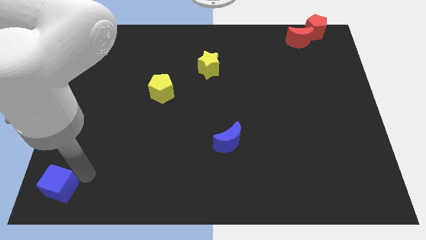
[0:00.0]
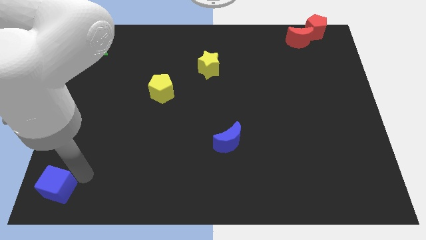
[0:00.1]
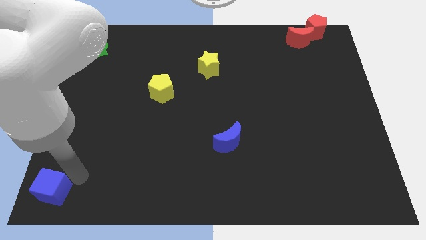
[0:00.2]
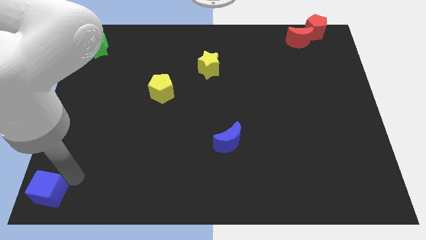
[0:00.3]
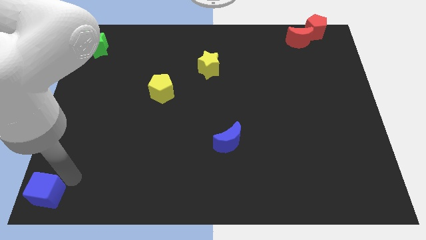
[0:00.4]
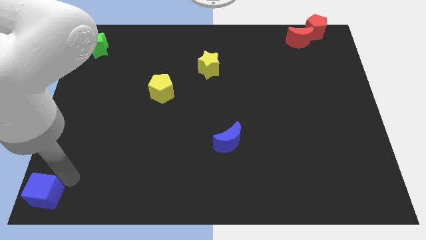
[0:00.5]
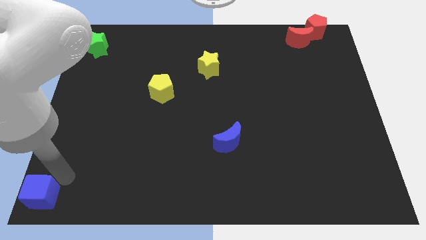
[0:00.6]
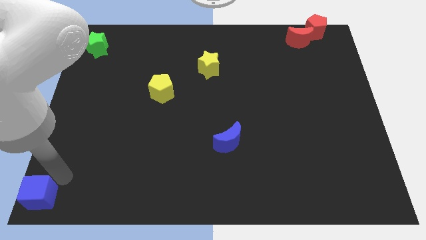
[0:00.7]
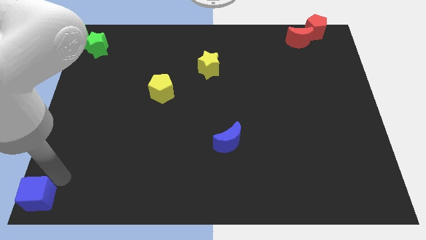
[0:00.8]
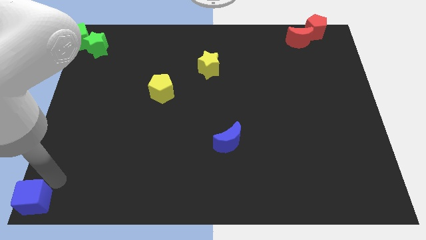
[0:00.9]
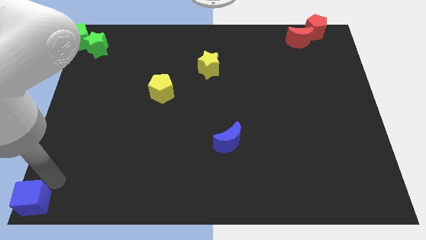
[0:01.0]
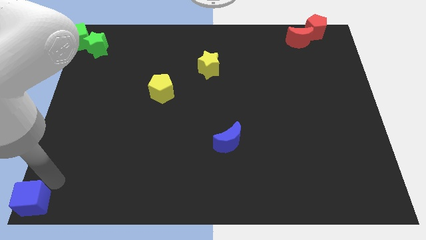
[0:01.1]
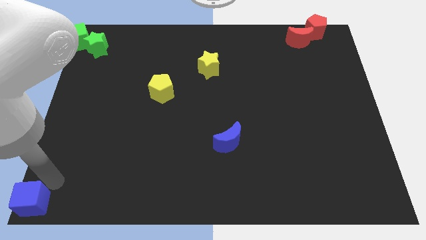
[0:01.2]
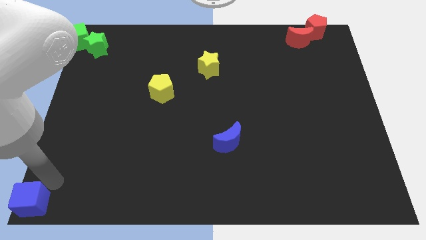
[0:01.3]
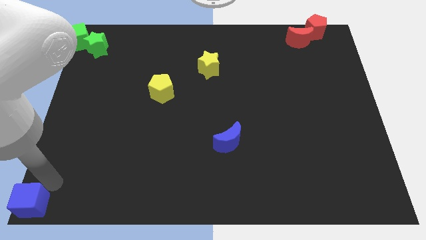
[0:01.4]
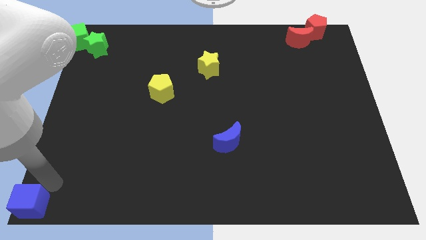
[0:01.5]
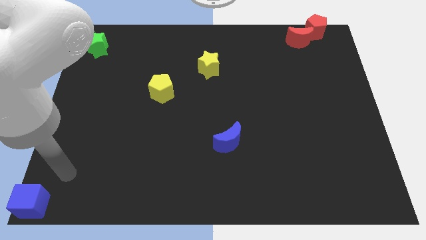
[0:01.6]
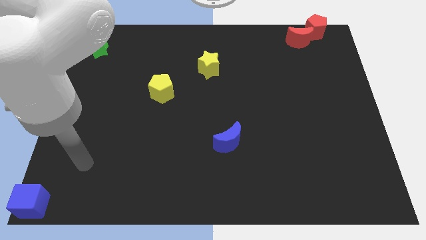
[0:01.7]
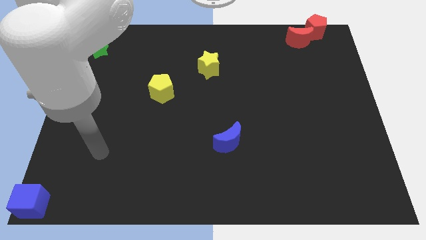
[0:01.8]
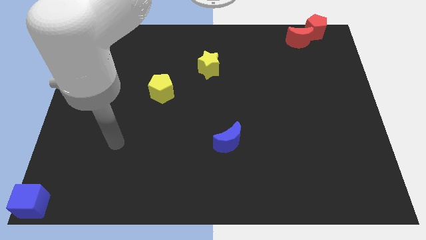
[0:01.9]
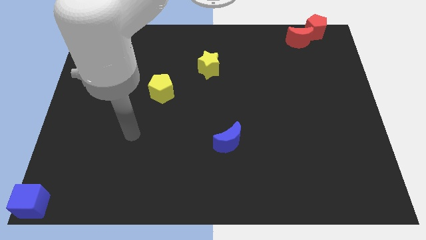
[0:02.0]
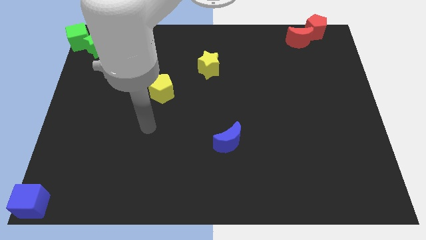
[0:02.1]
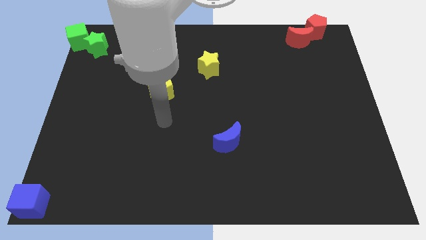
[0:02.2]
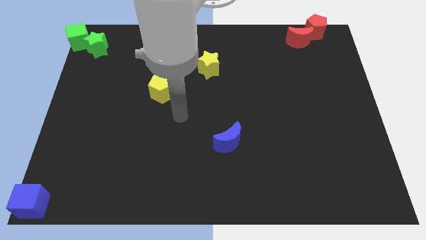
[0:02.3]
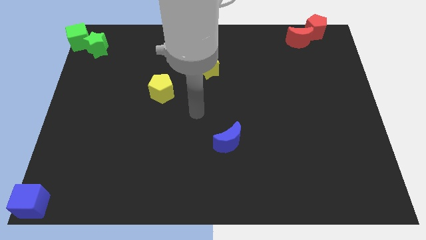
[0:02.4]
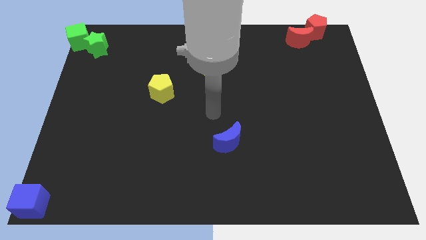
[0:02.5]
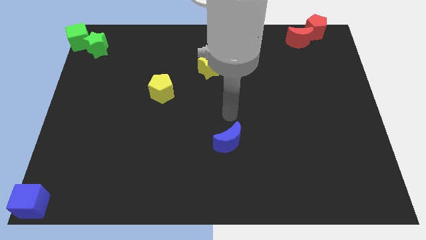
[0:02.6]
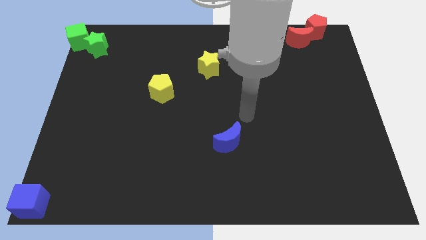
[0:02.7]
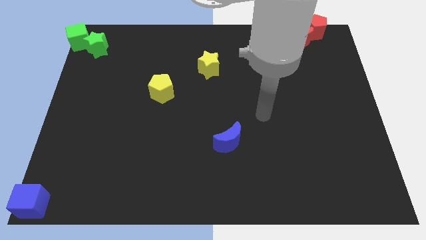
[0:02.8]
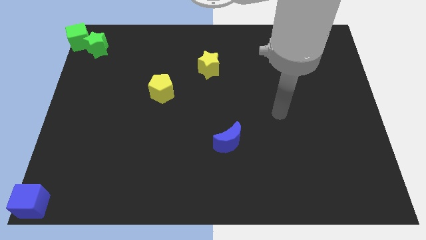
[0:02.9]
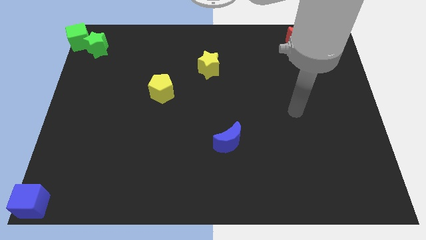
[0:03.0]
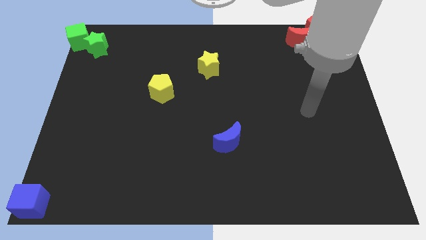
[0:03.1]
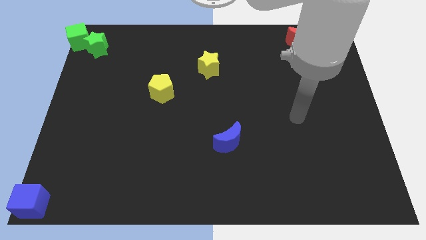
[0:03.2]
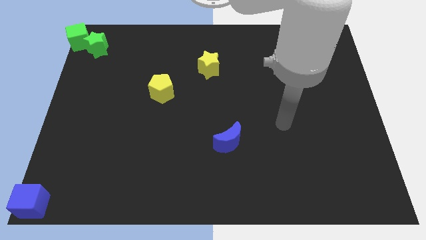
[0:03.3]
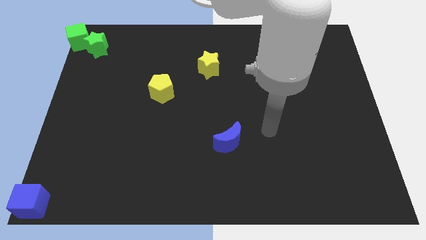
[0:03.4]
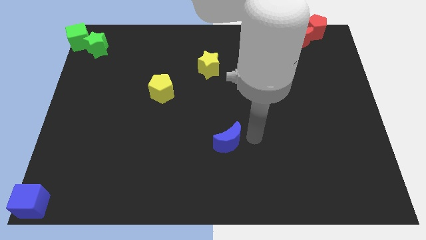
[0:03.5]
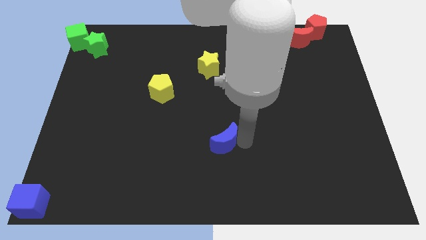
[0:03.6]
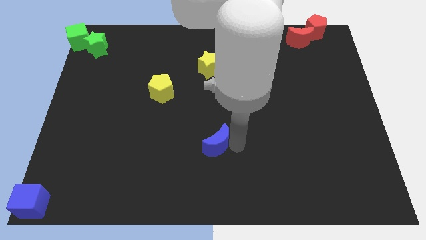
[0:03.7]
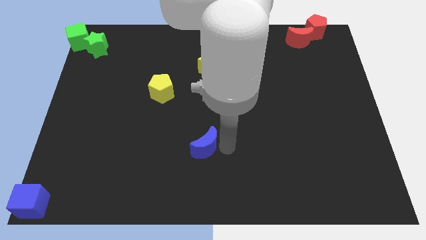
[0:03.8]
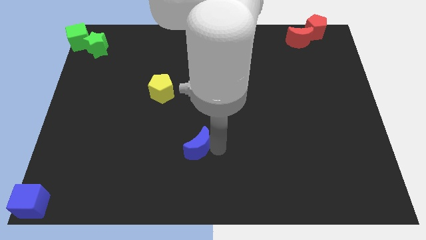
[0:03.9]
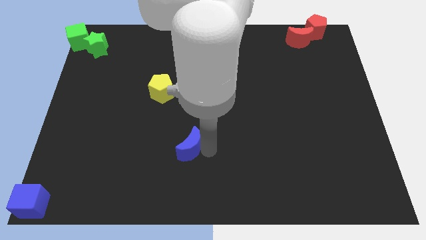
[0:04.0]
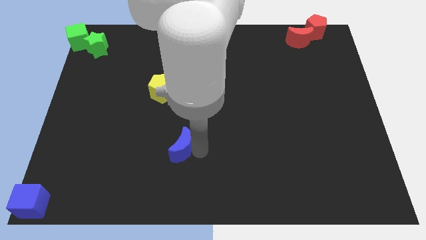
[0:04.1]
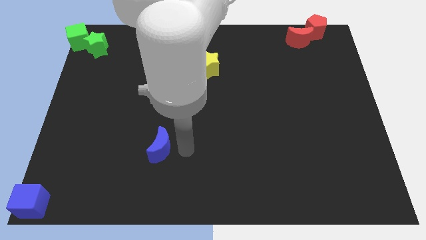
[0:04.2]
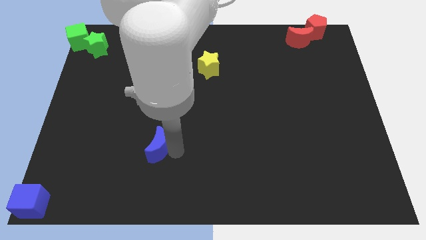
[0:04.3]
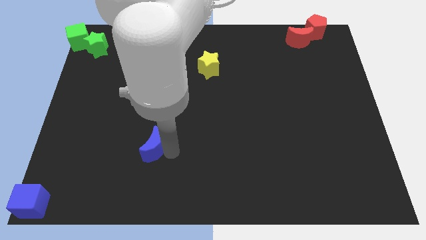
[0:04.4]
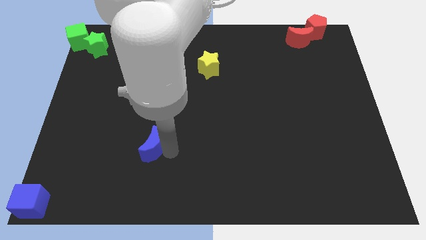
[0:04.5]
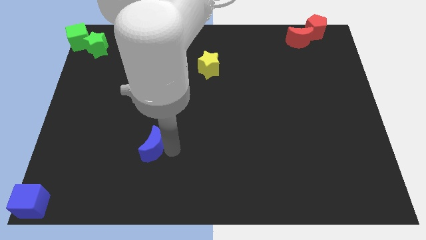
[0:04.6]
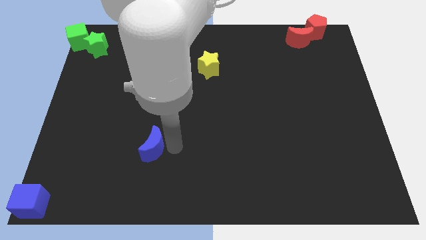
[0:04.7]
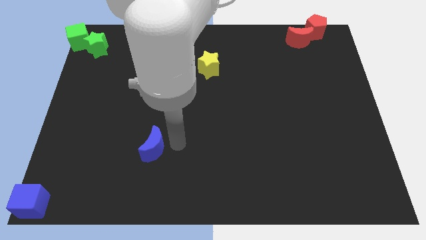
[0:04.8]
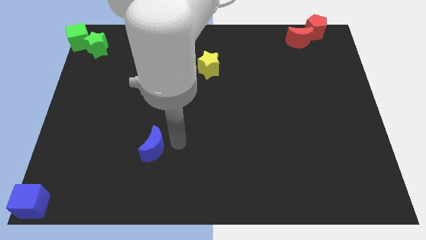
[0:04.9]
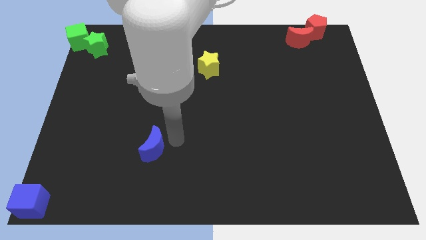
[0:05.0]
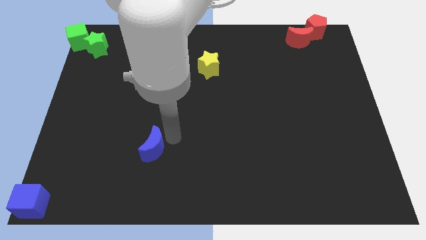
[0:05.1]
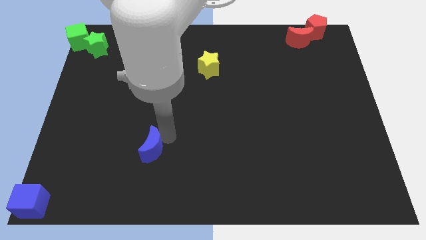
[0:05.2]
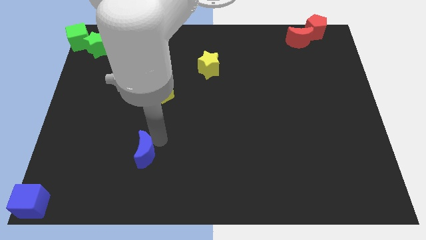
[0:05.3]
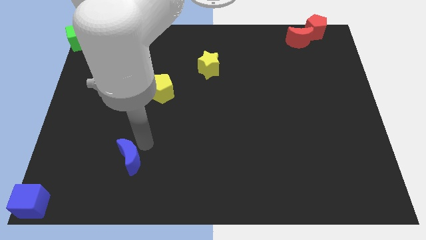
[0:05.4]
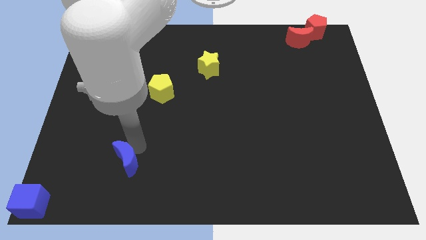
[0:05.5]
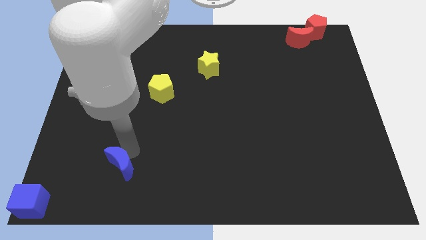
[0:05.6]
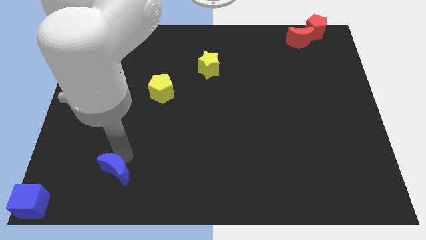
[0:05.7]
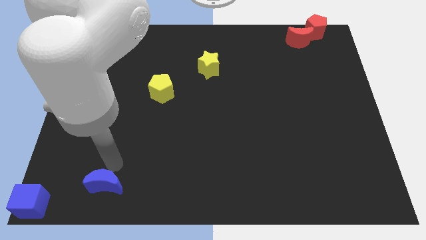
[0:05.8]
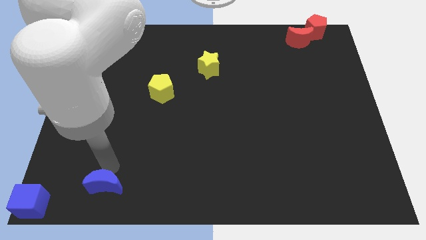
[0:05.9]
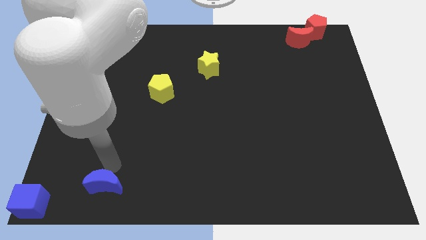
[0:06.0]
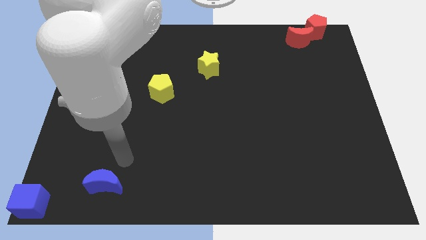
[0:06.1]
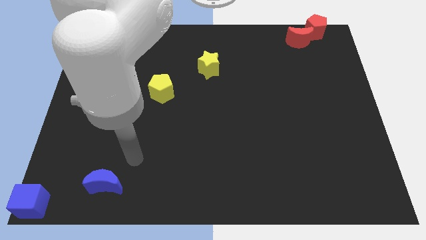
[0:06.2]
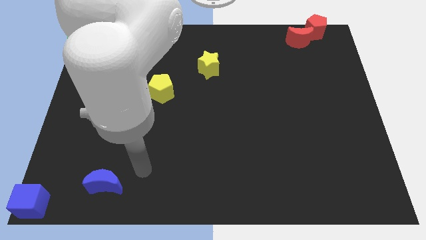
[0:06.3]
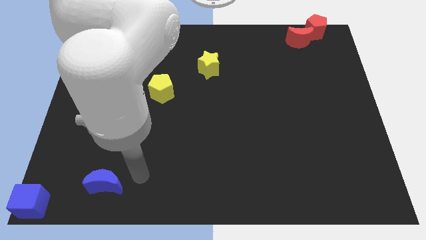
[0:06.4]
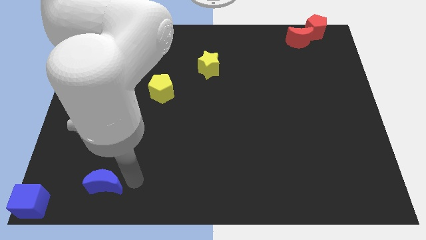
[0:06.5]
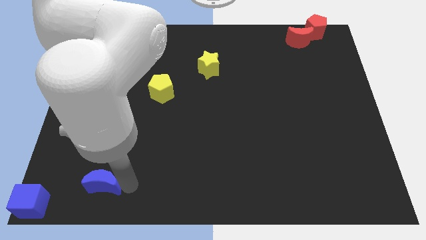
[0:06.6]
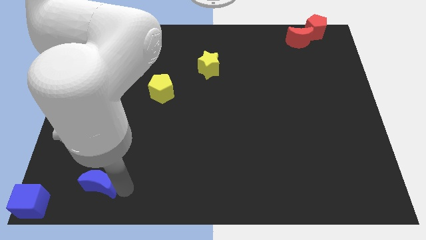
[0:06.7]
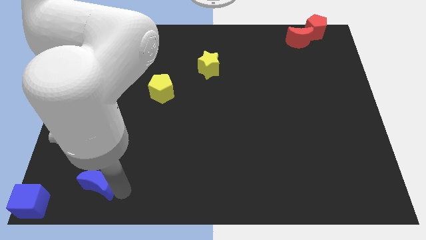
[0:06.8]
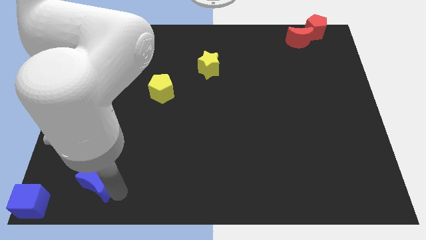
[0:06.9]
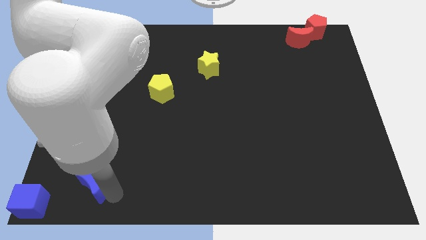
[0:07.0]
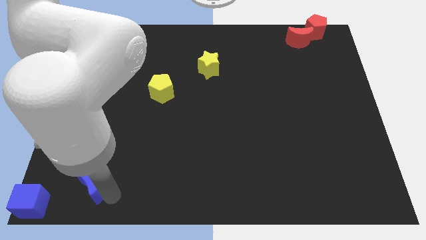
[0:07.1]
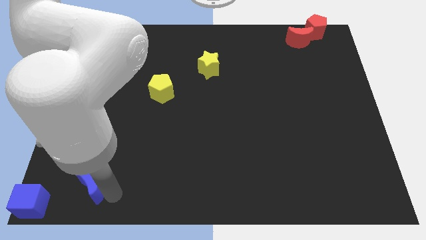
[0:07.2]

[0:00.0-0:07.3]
move the blue moon close to the blue cube

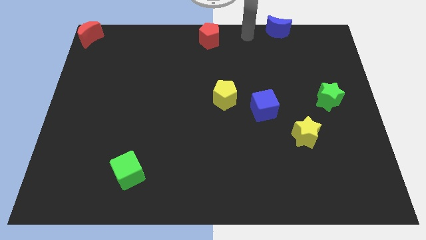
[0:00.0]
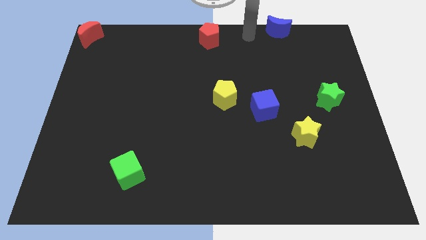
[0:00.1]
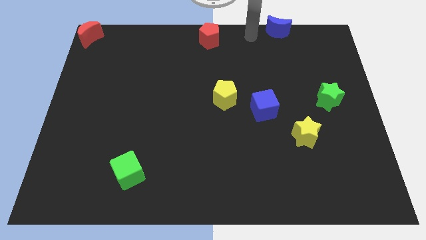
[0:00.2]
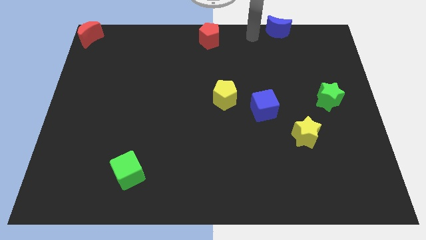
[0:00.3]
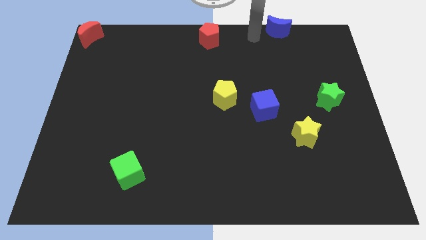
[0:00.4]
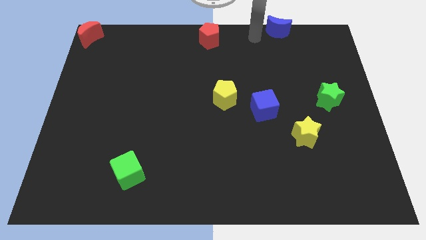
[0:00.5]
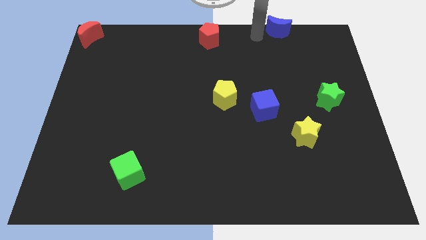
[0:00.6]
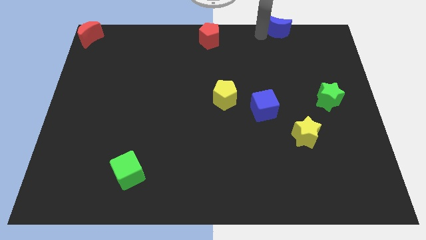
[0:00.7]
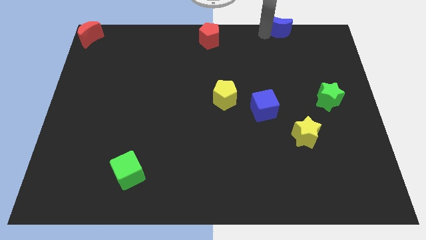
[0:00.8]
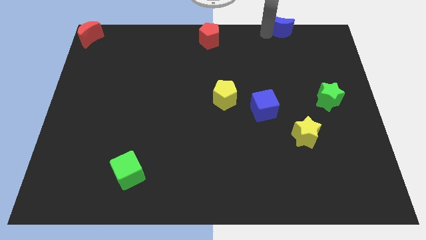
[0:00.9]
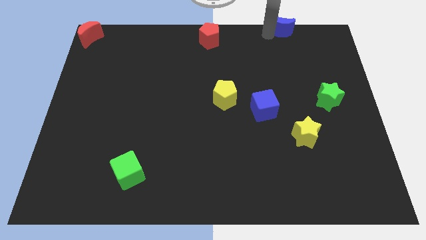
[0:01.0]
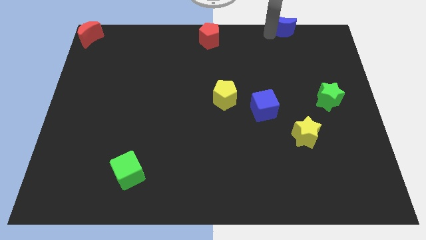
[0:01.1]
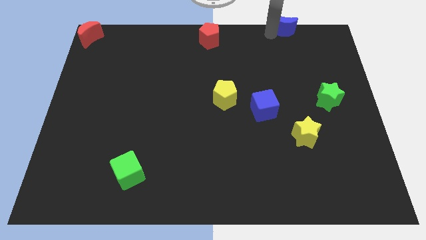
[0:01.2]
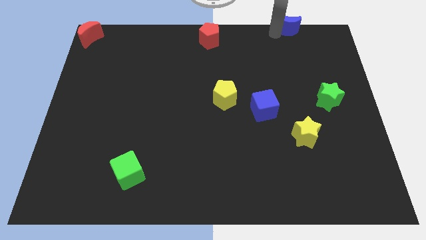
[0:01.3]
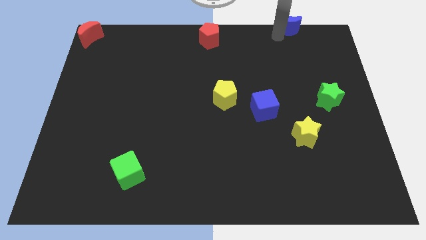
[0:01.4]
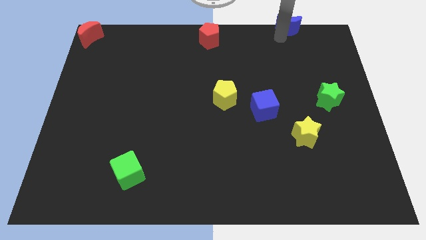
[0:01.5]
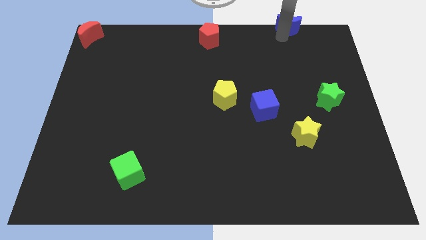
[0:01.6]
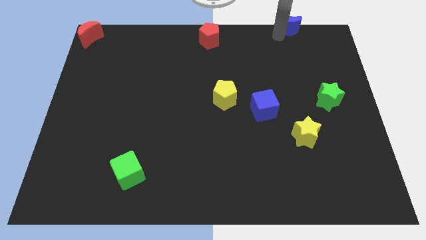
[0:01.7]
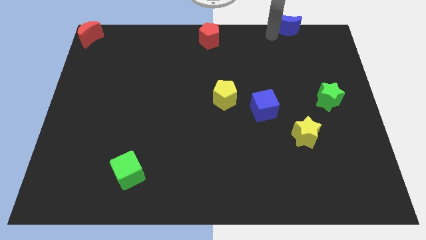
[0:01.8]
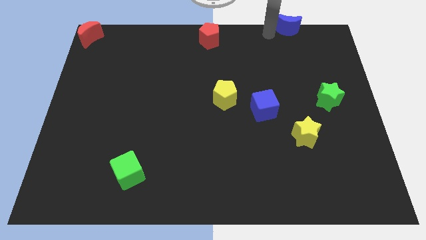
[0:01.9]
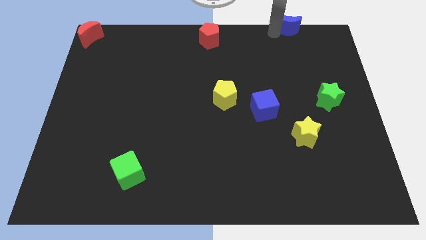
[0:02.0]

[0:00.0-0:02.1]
push the blue moon towards the right side
